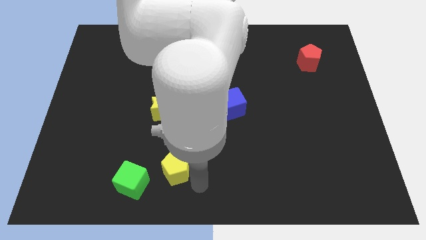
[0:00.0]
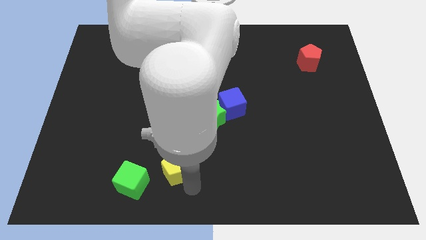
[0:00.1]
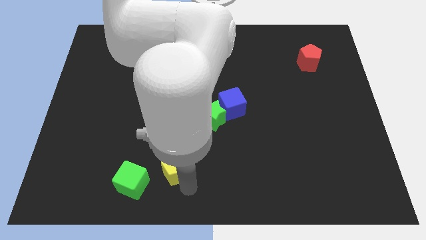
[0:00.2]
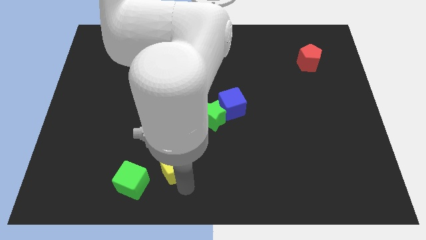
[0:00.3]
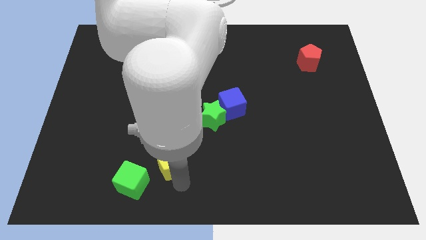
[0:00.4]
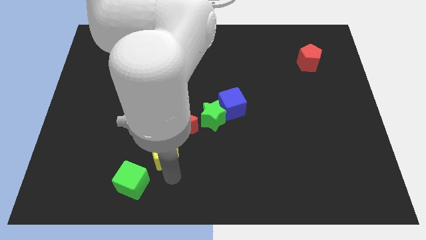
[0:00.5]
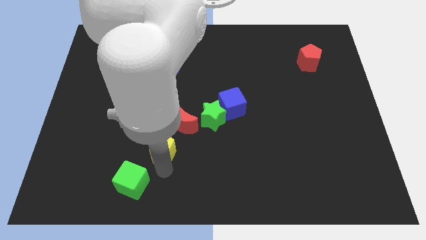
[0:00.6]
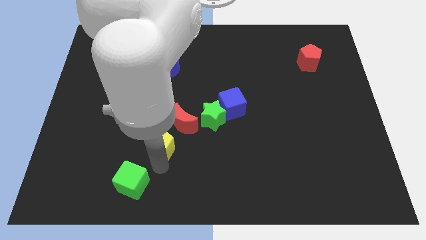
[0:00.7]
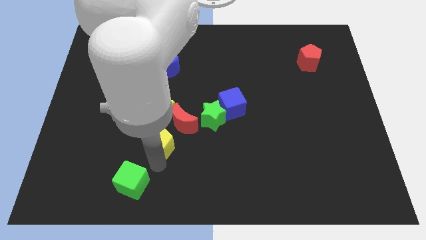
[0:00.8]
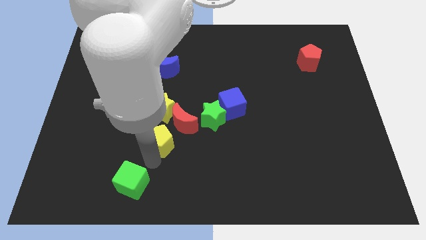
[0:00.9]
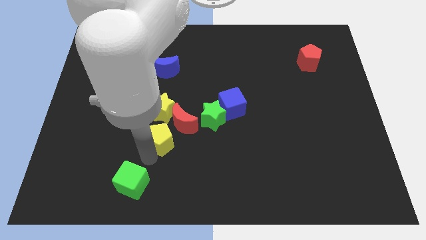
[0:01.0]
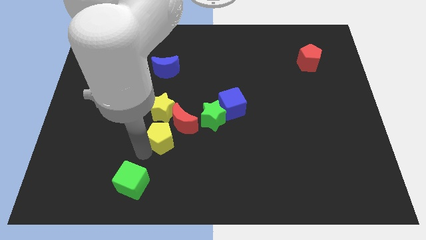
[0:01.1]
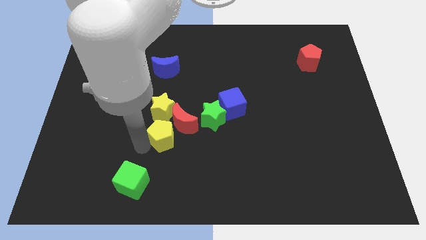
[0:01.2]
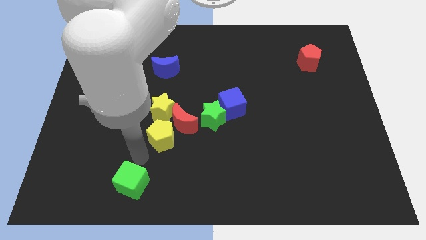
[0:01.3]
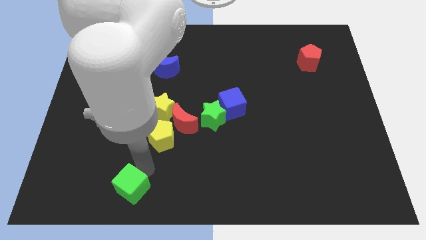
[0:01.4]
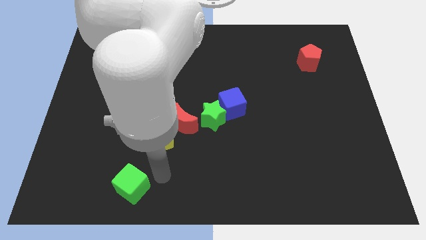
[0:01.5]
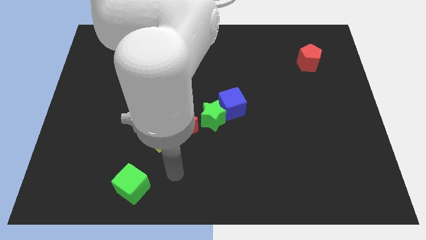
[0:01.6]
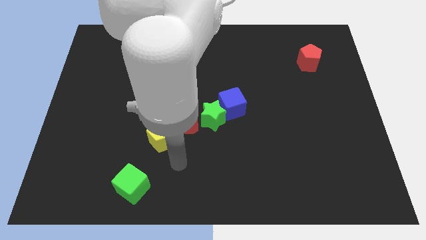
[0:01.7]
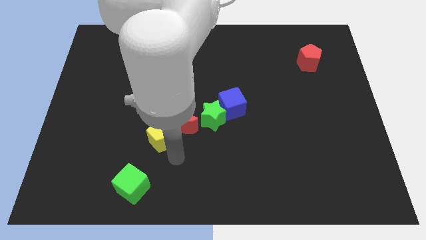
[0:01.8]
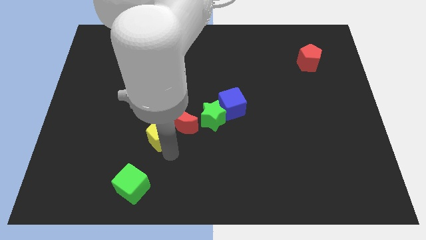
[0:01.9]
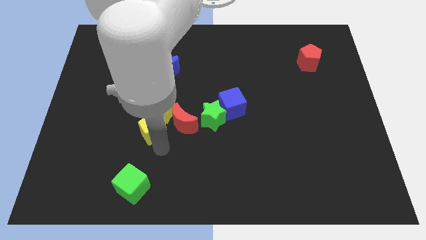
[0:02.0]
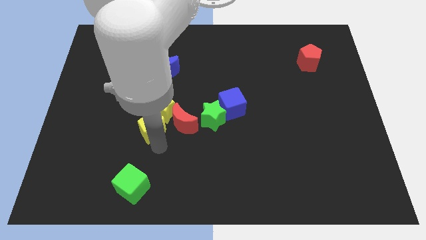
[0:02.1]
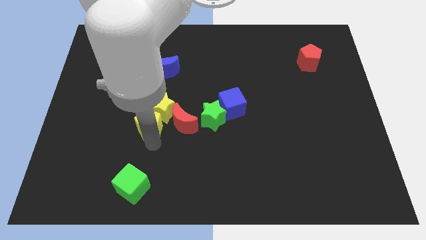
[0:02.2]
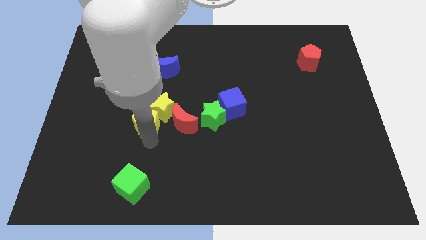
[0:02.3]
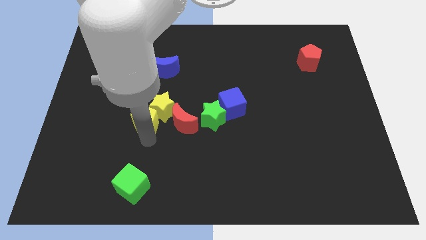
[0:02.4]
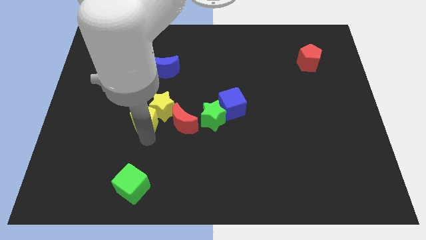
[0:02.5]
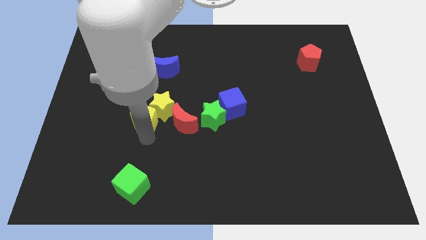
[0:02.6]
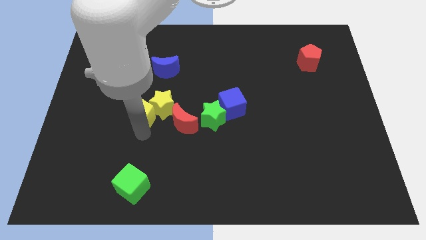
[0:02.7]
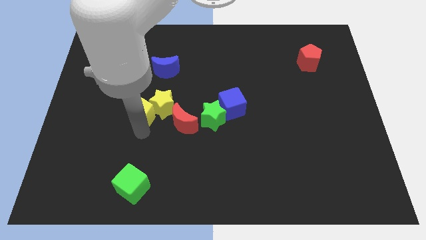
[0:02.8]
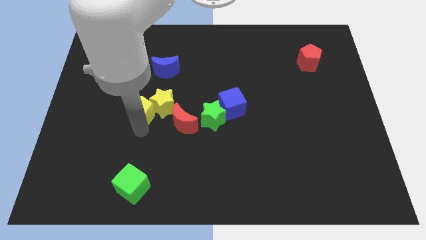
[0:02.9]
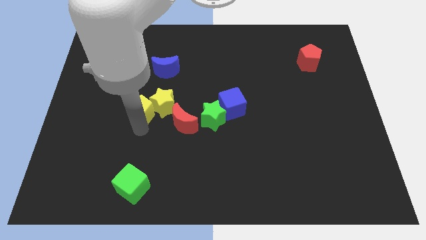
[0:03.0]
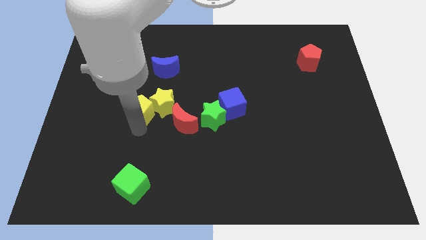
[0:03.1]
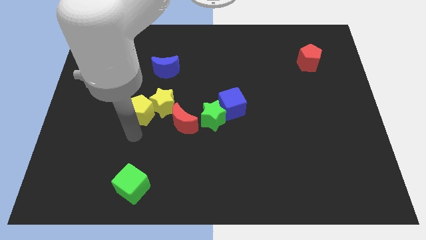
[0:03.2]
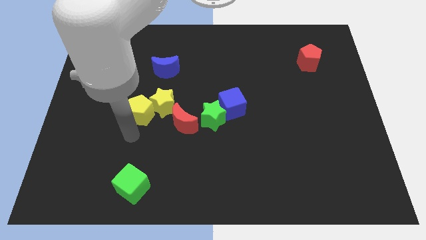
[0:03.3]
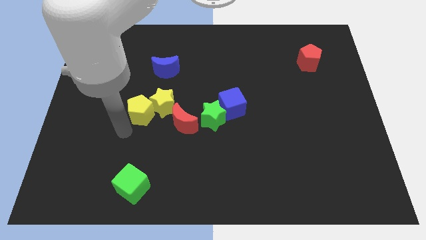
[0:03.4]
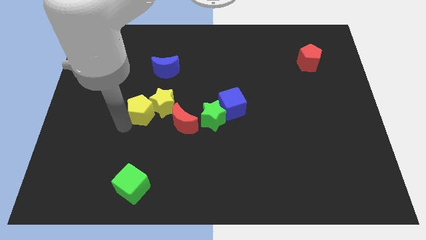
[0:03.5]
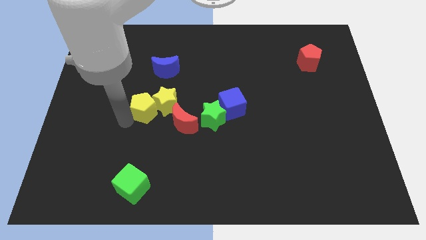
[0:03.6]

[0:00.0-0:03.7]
push yellow pentagon to the left of the yellow star

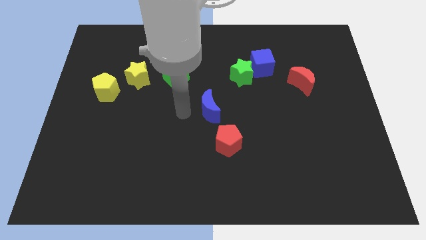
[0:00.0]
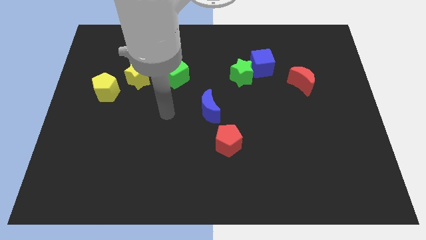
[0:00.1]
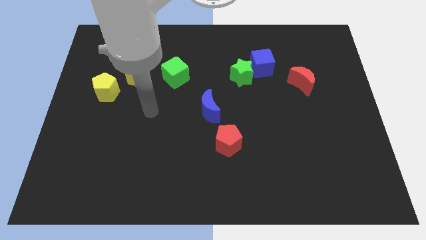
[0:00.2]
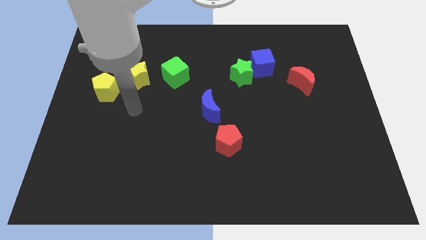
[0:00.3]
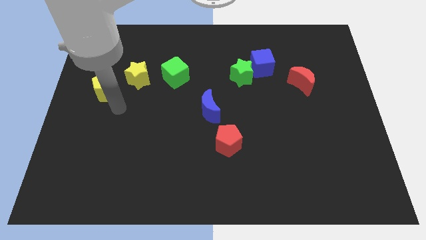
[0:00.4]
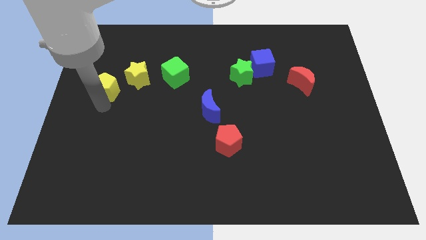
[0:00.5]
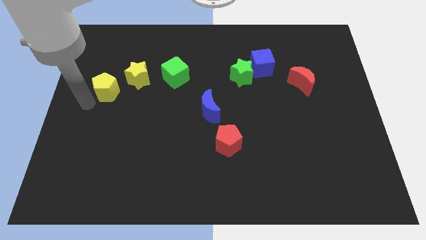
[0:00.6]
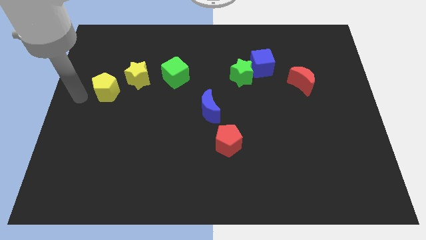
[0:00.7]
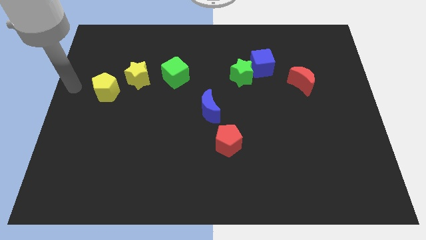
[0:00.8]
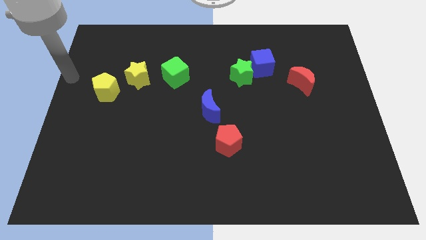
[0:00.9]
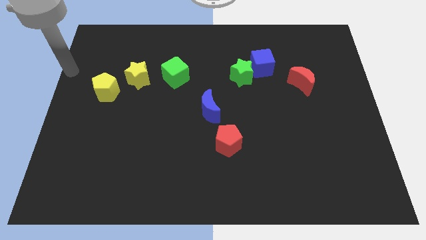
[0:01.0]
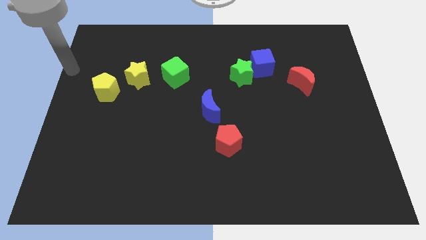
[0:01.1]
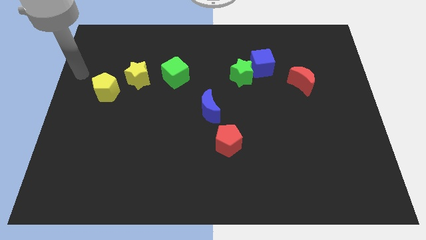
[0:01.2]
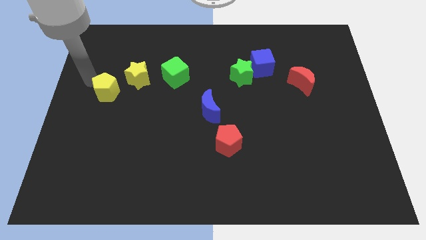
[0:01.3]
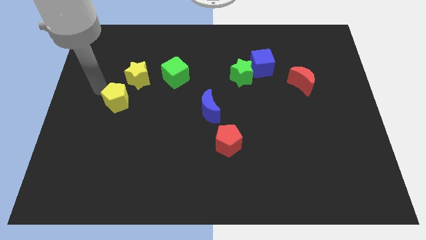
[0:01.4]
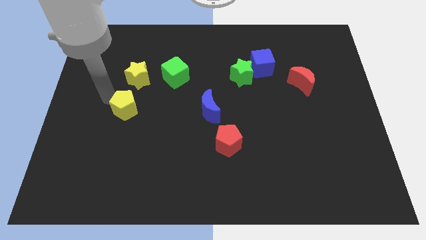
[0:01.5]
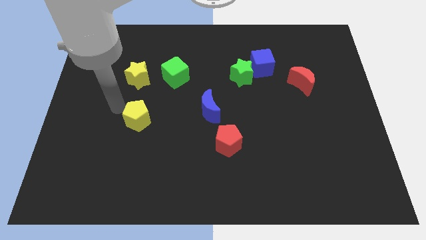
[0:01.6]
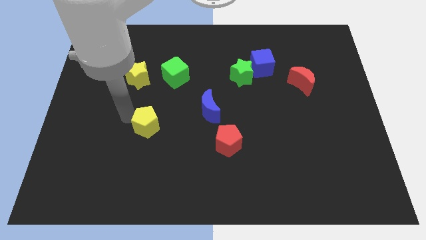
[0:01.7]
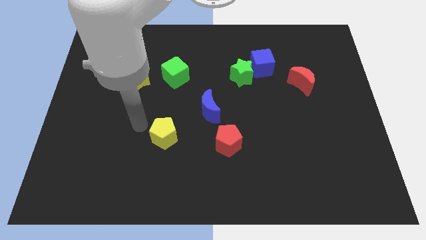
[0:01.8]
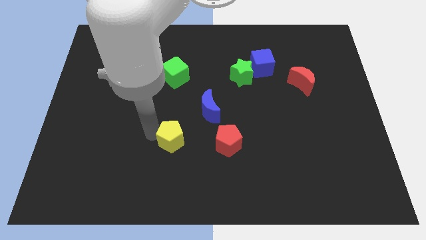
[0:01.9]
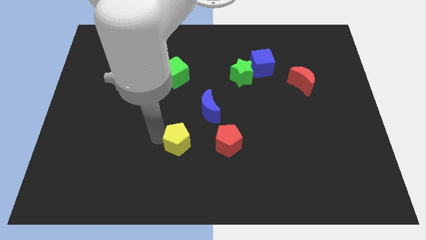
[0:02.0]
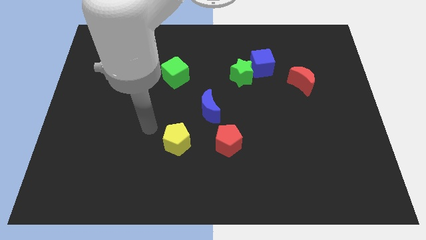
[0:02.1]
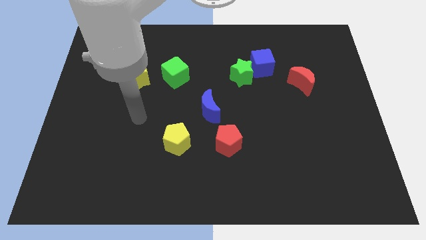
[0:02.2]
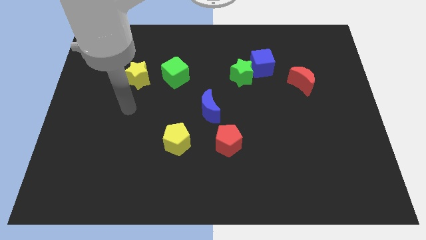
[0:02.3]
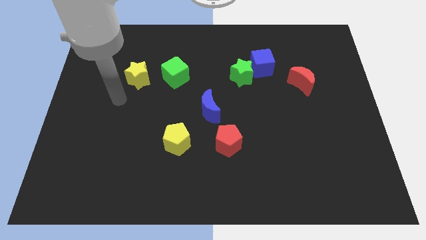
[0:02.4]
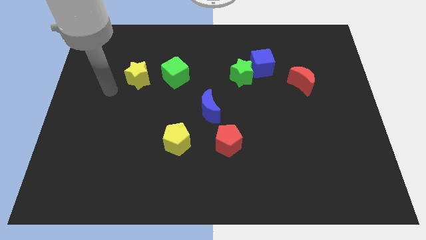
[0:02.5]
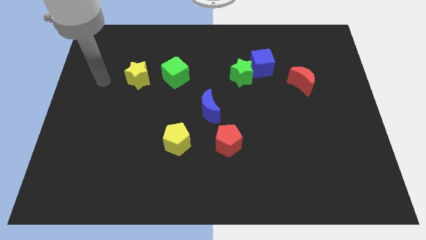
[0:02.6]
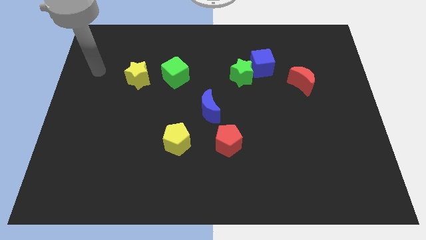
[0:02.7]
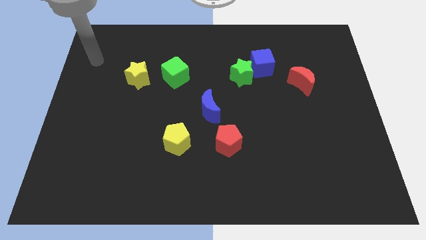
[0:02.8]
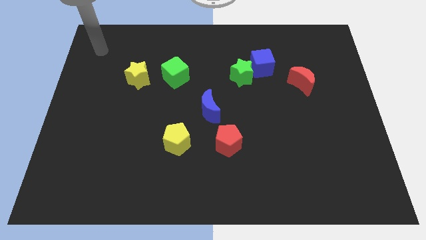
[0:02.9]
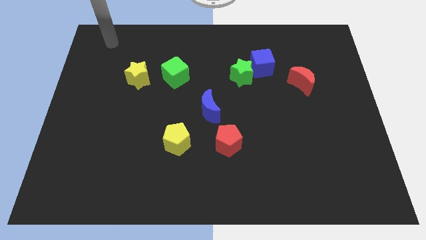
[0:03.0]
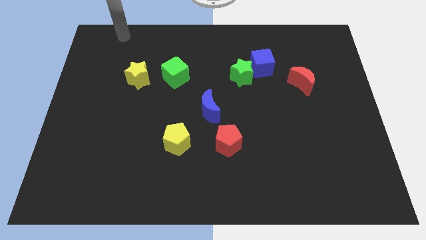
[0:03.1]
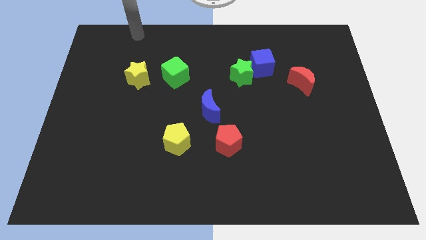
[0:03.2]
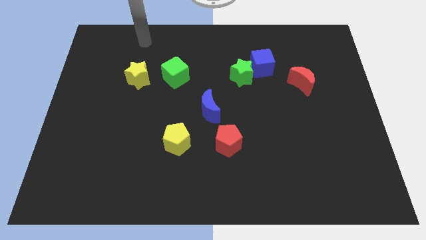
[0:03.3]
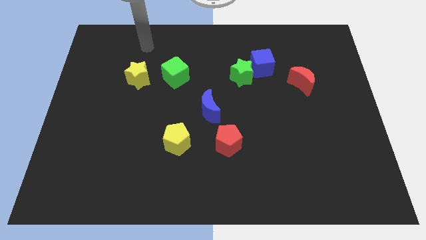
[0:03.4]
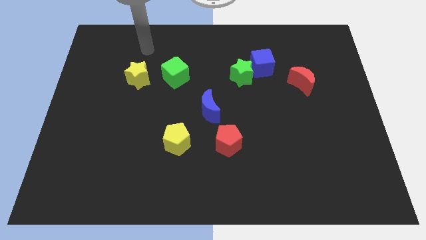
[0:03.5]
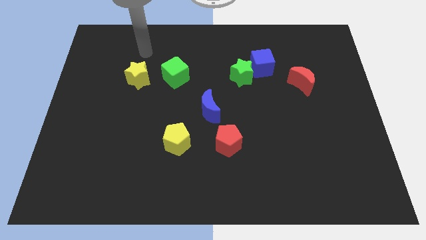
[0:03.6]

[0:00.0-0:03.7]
slide the yellow pentagon diagonally bottom right to the yellow star

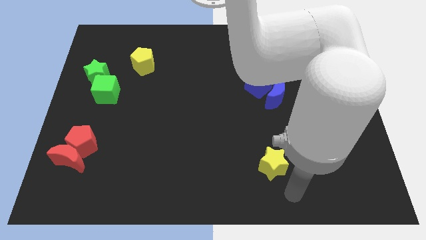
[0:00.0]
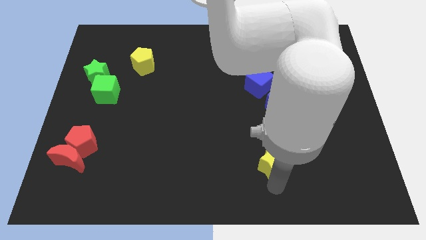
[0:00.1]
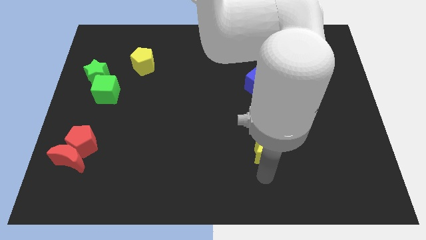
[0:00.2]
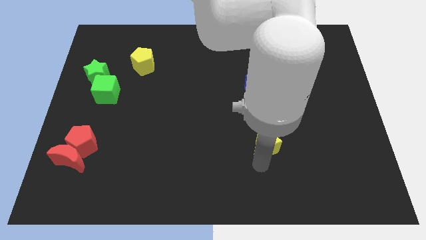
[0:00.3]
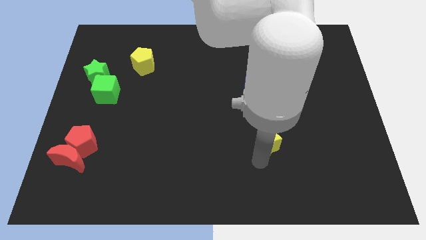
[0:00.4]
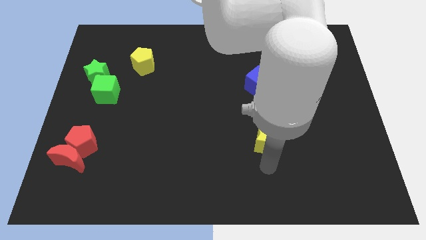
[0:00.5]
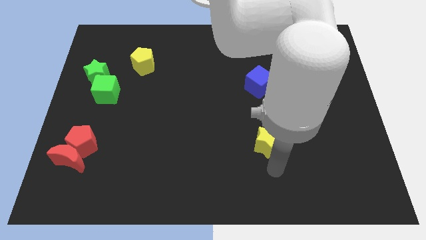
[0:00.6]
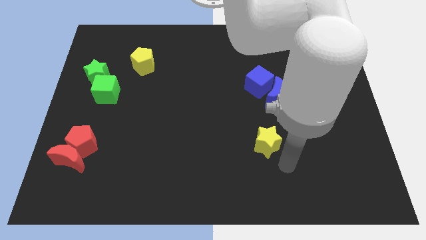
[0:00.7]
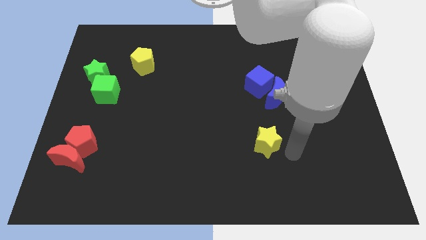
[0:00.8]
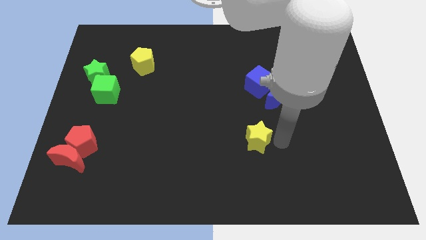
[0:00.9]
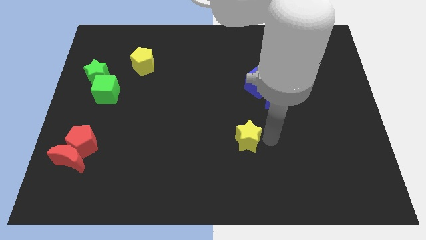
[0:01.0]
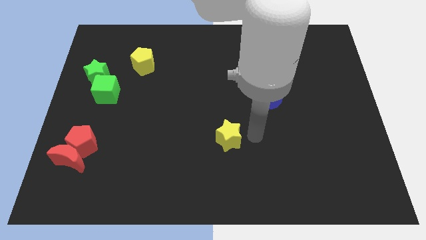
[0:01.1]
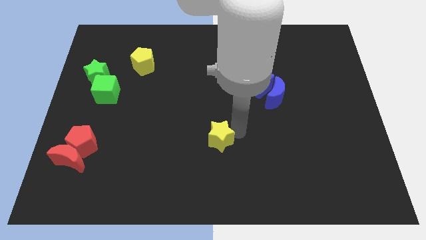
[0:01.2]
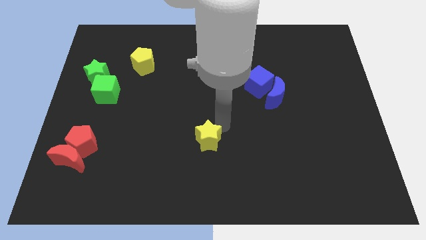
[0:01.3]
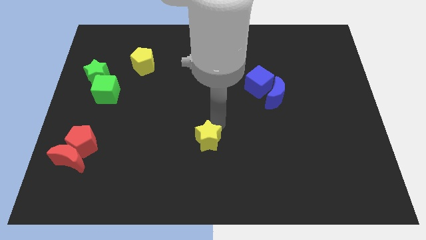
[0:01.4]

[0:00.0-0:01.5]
drag the yellow star diagonally bottom left to the blue moon

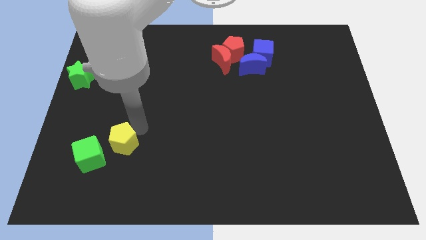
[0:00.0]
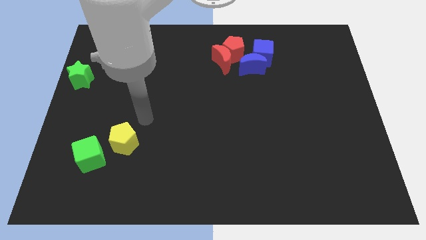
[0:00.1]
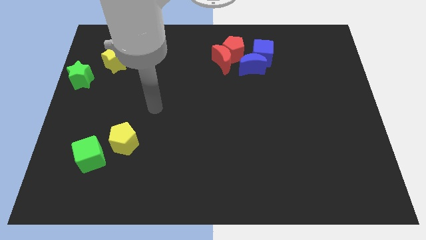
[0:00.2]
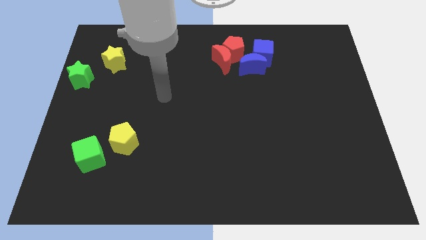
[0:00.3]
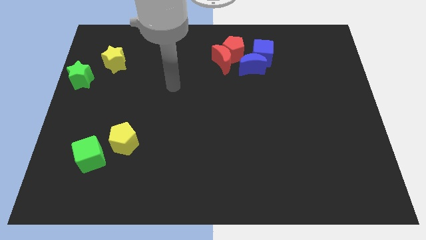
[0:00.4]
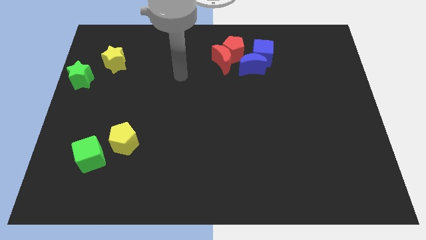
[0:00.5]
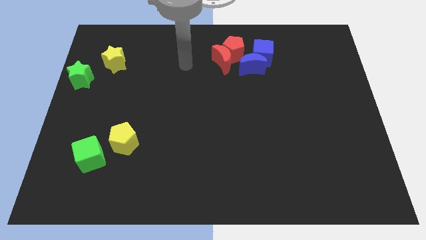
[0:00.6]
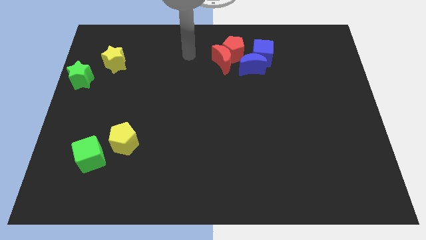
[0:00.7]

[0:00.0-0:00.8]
move your arm left to the red crescent
